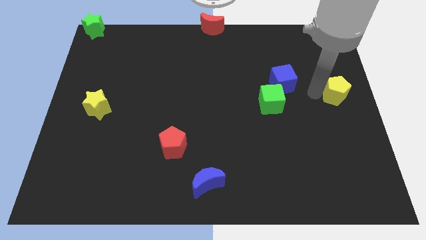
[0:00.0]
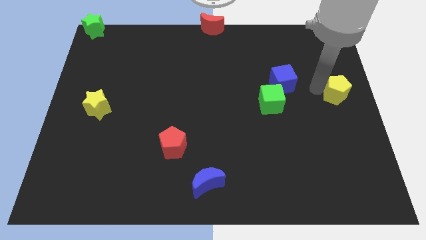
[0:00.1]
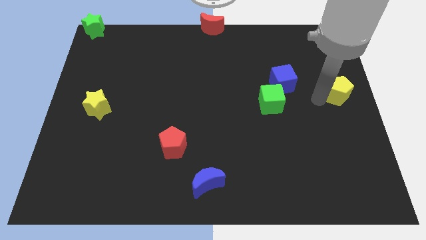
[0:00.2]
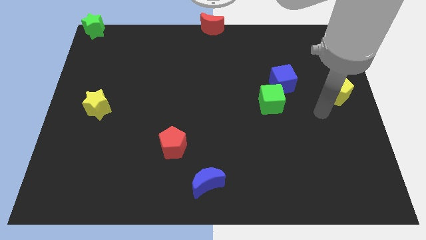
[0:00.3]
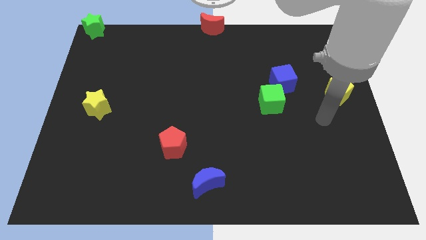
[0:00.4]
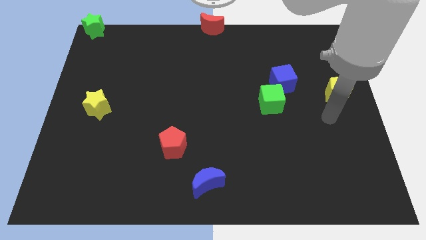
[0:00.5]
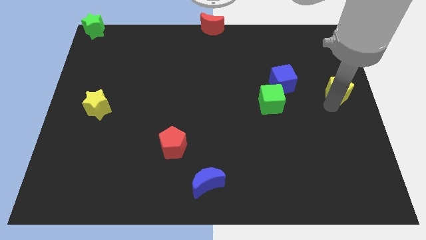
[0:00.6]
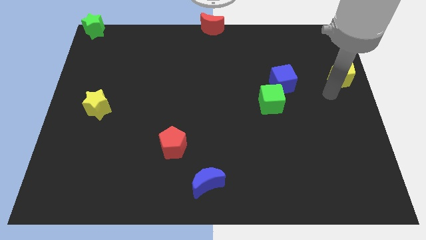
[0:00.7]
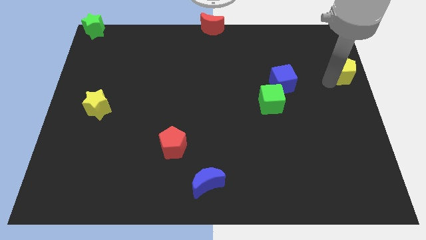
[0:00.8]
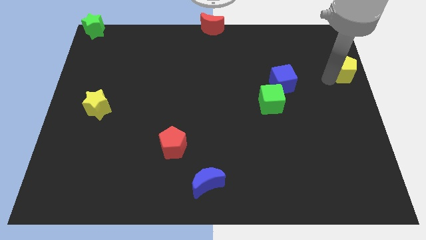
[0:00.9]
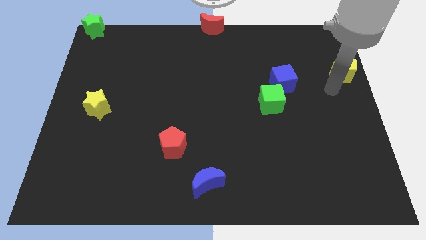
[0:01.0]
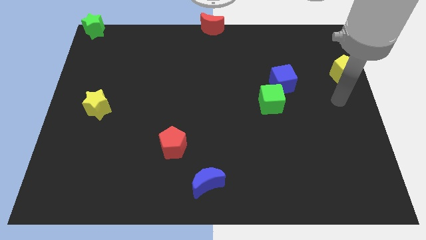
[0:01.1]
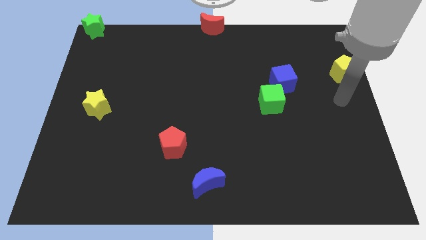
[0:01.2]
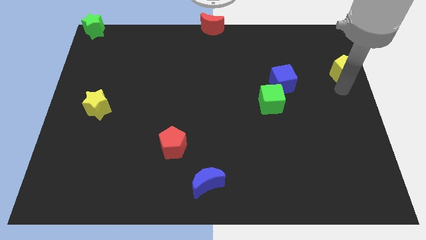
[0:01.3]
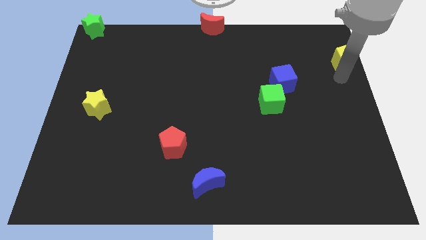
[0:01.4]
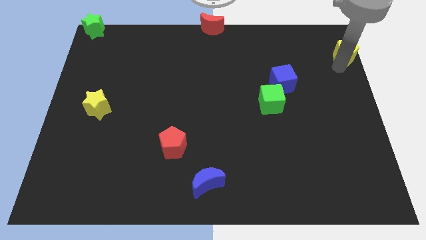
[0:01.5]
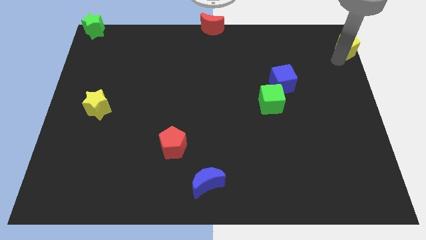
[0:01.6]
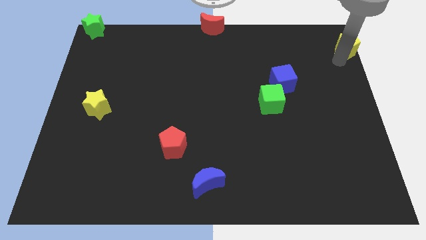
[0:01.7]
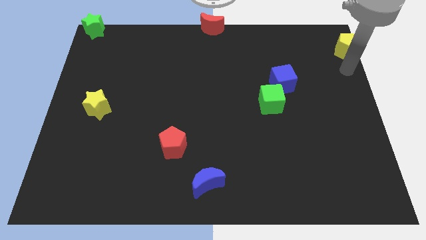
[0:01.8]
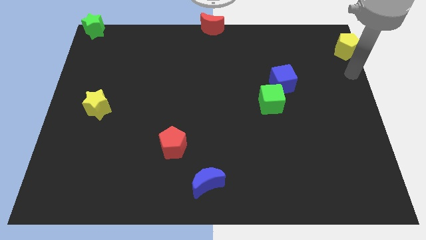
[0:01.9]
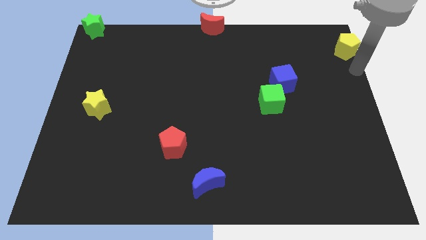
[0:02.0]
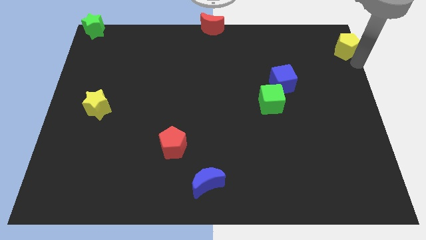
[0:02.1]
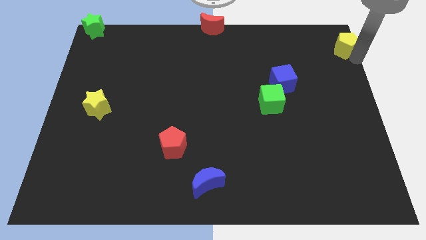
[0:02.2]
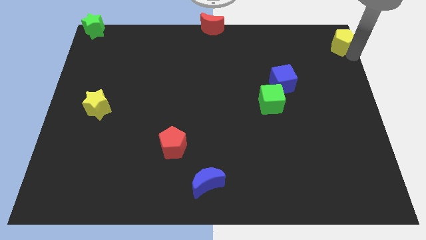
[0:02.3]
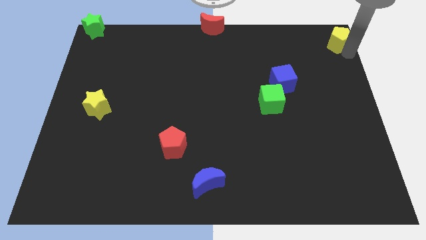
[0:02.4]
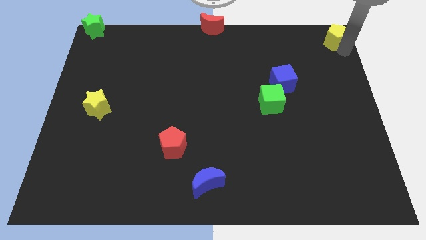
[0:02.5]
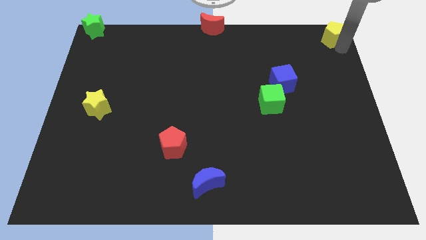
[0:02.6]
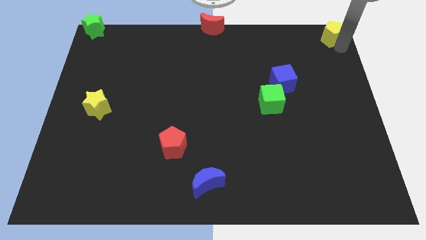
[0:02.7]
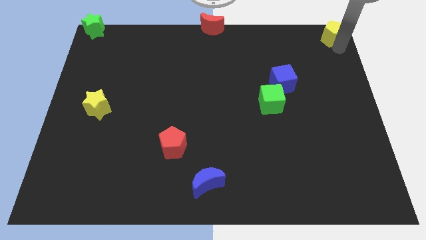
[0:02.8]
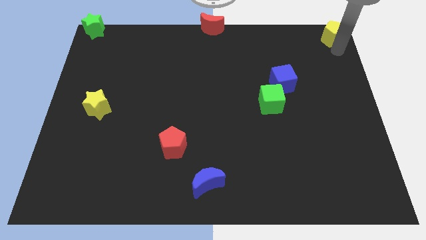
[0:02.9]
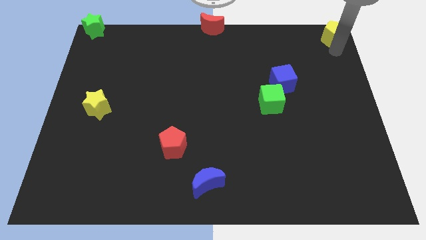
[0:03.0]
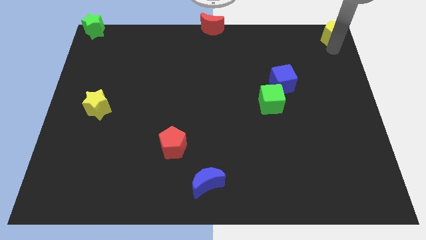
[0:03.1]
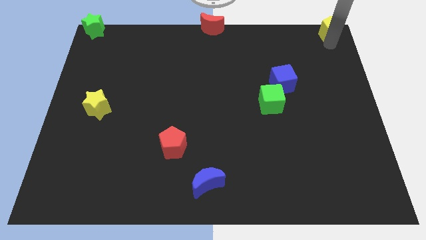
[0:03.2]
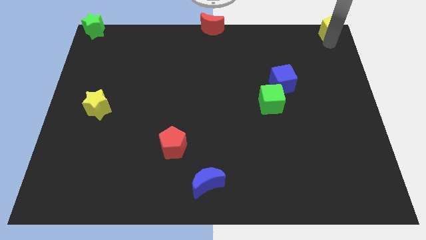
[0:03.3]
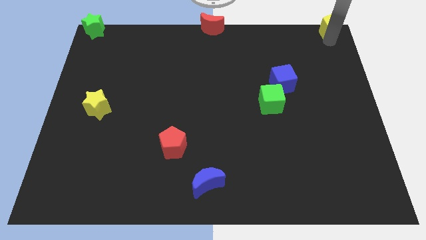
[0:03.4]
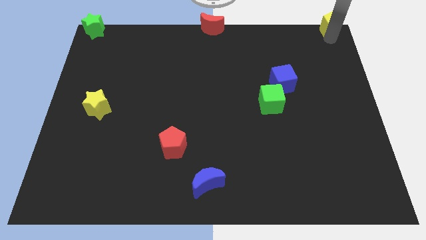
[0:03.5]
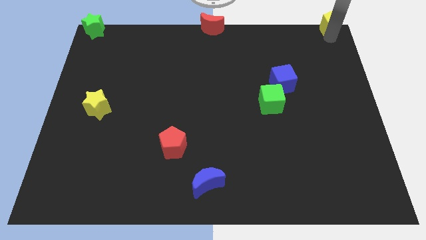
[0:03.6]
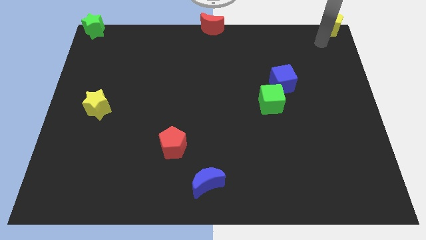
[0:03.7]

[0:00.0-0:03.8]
push the yellow pentagon towards the top right corner of the board

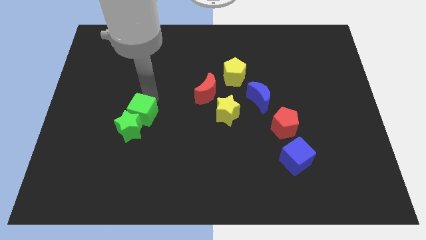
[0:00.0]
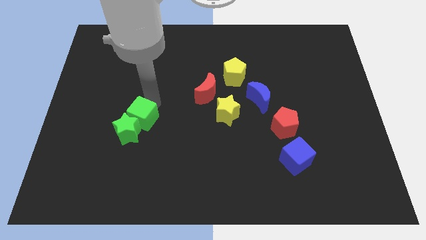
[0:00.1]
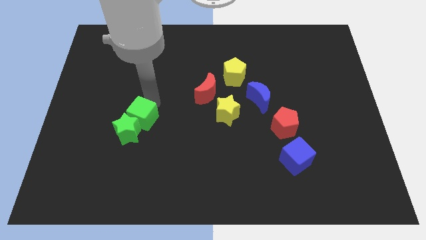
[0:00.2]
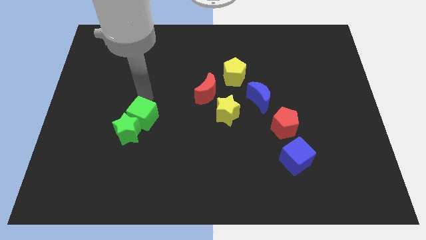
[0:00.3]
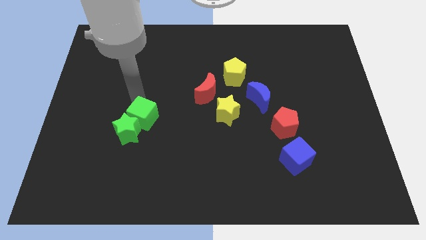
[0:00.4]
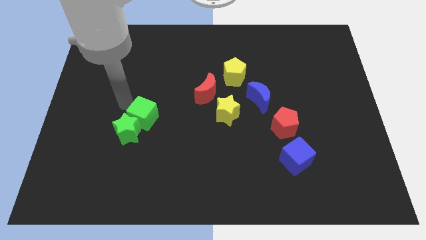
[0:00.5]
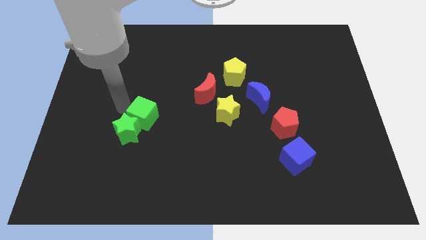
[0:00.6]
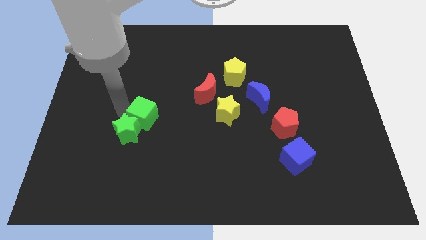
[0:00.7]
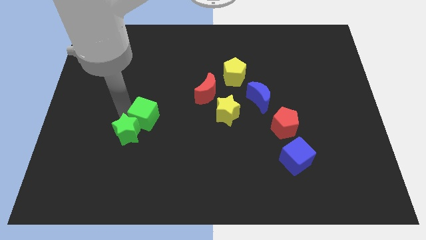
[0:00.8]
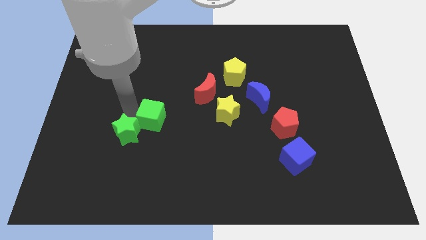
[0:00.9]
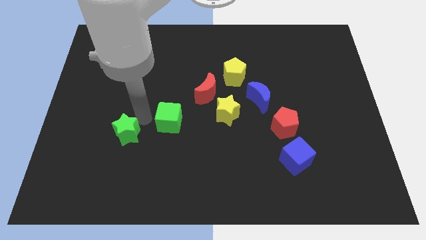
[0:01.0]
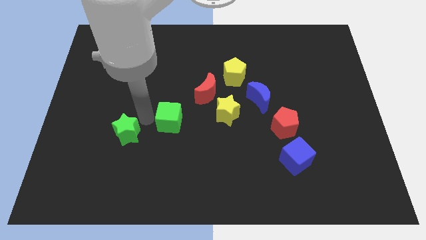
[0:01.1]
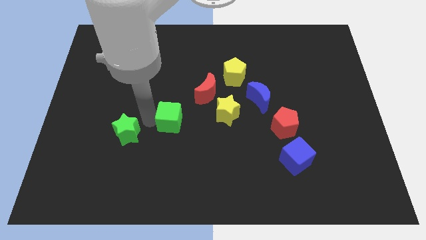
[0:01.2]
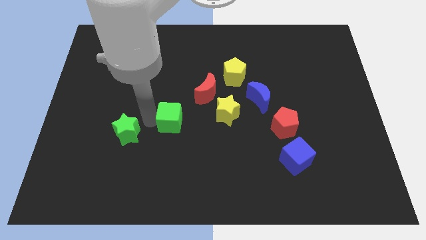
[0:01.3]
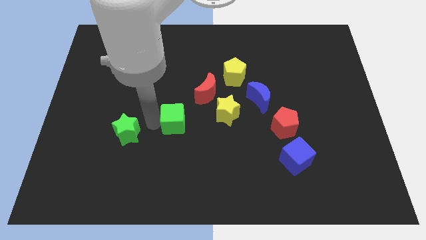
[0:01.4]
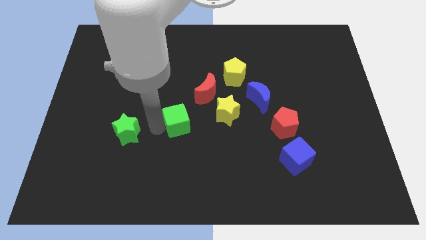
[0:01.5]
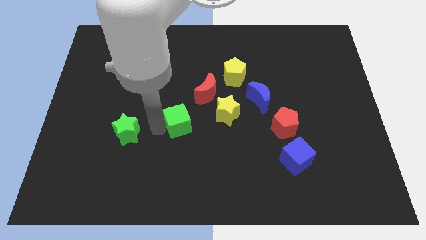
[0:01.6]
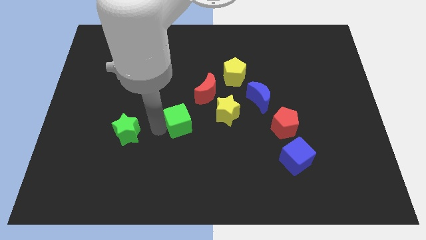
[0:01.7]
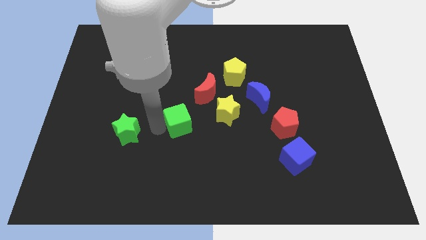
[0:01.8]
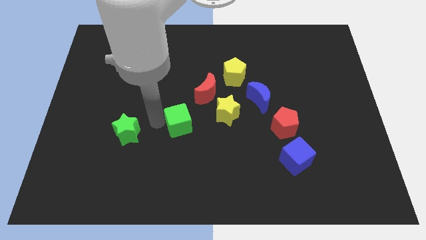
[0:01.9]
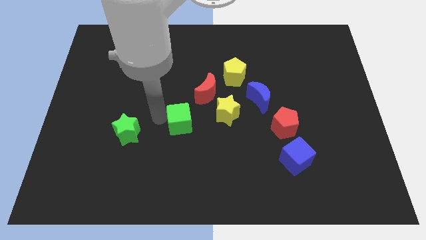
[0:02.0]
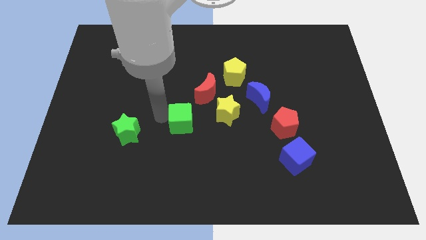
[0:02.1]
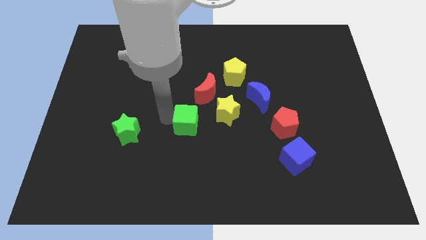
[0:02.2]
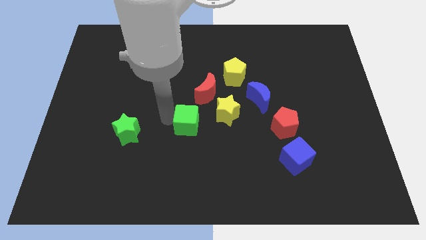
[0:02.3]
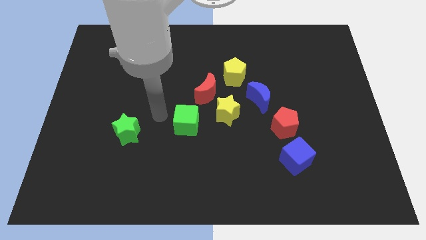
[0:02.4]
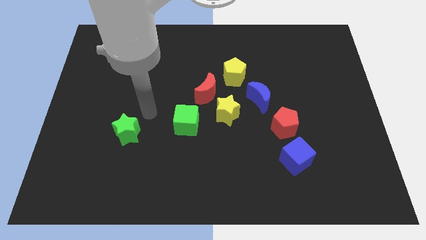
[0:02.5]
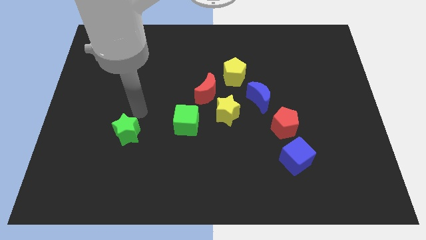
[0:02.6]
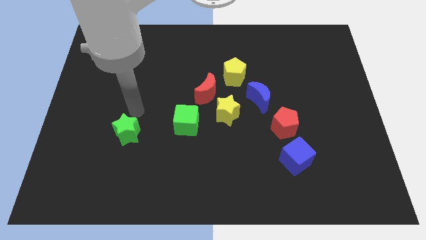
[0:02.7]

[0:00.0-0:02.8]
place the green cube to the bottom of red crescent

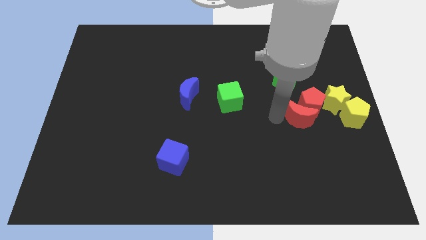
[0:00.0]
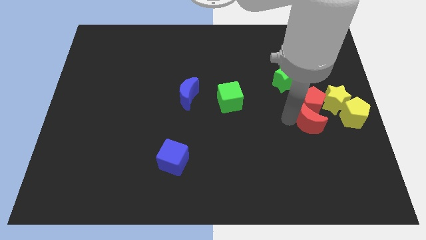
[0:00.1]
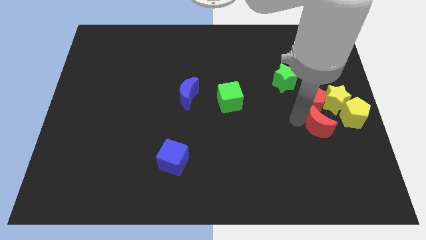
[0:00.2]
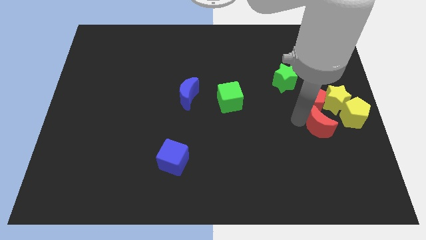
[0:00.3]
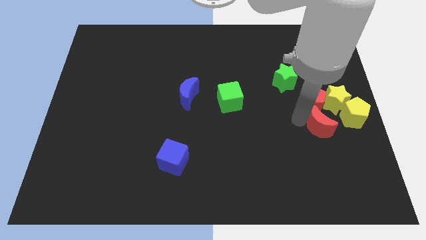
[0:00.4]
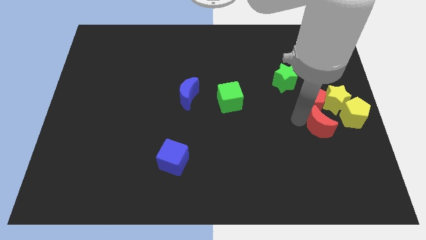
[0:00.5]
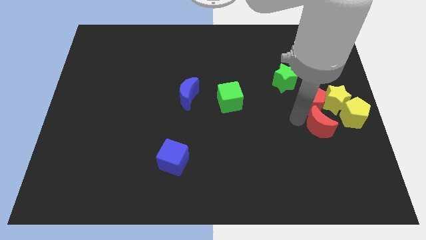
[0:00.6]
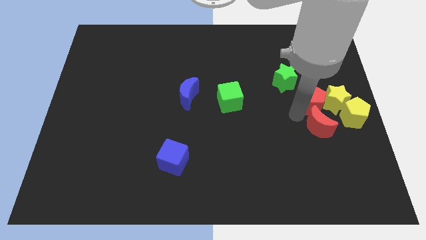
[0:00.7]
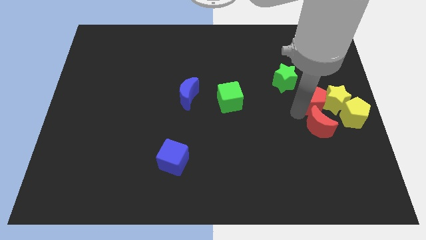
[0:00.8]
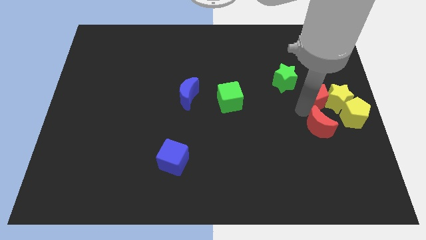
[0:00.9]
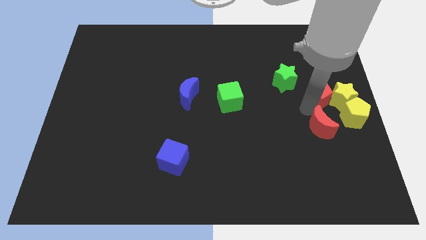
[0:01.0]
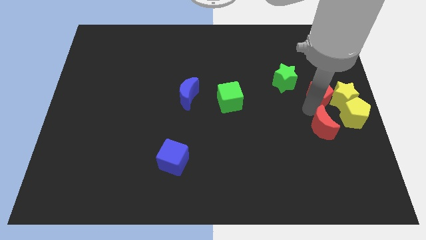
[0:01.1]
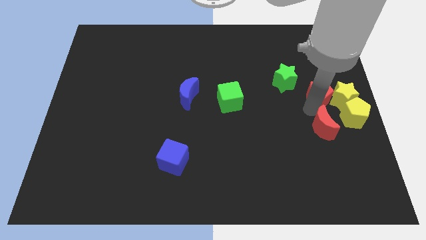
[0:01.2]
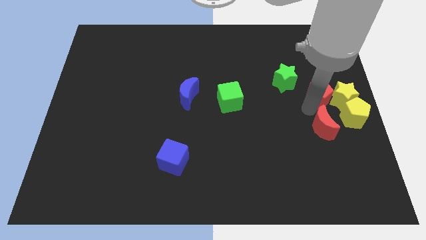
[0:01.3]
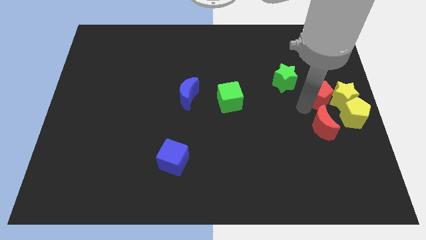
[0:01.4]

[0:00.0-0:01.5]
adjust the red moon vertically below the red pentagon

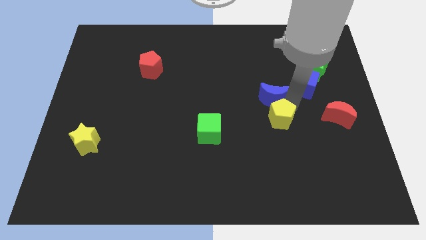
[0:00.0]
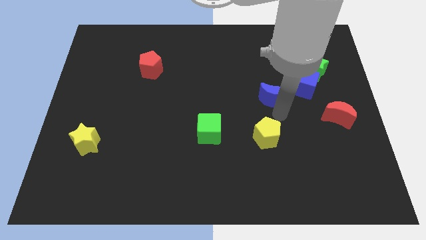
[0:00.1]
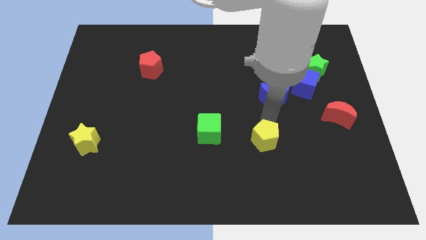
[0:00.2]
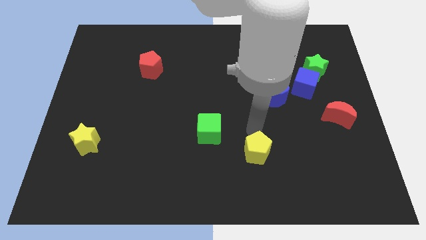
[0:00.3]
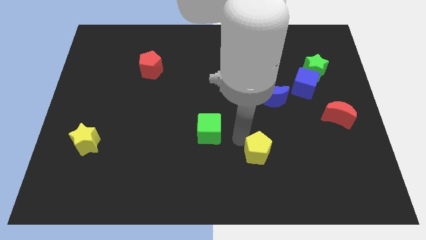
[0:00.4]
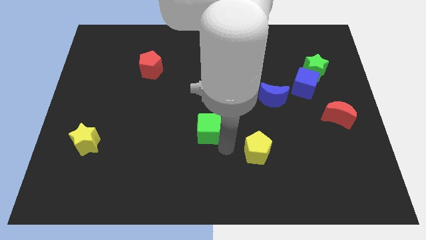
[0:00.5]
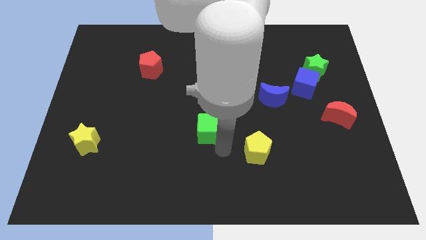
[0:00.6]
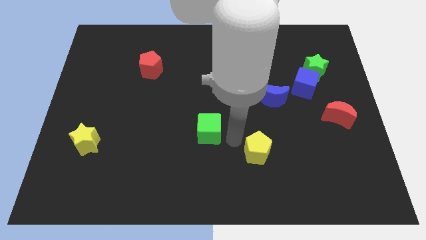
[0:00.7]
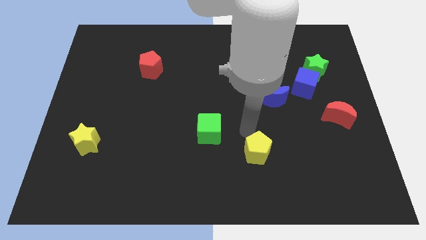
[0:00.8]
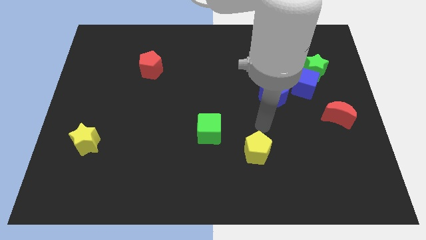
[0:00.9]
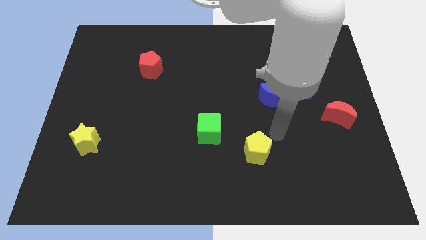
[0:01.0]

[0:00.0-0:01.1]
separate yellow pentagon from blue moon

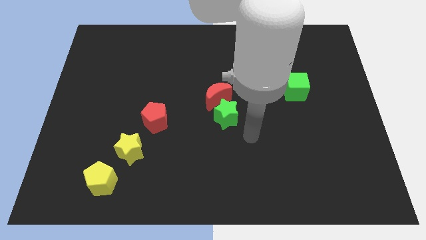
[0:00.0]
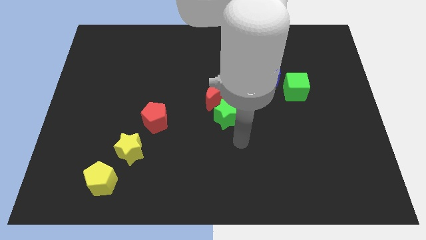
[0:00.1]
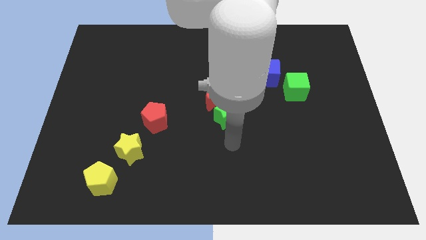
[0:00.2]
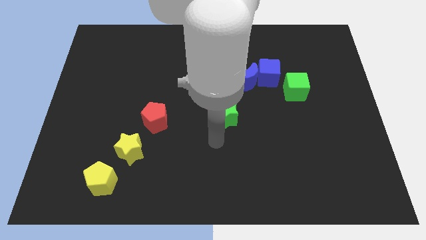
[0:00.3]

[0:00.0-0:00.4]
place your arm below green star
